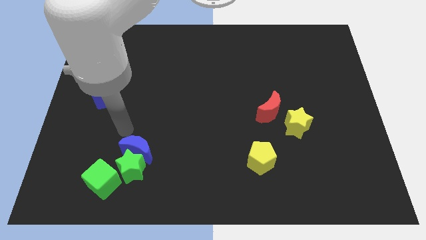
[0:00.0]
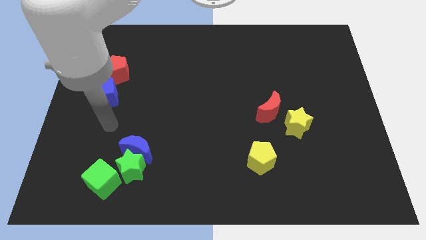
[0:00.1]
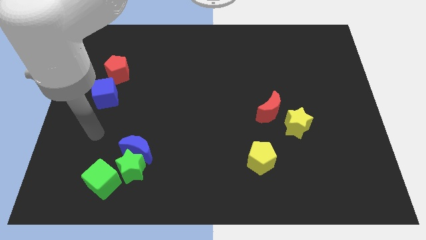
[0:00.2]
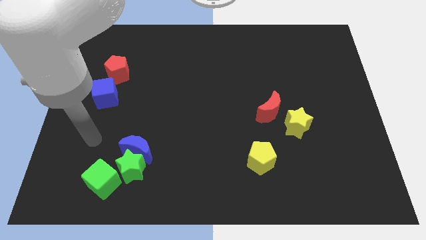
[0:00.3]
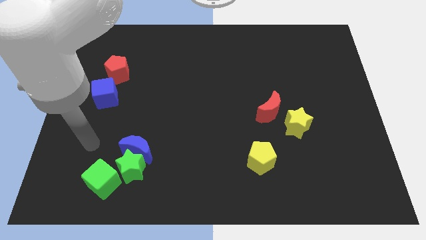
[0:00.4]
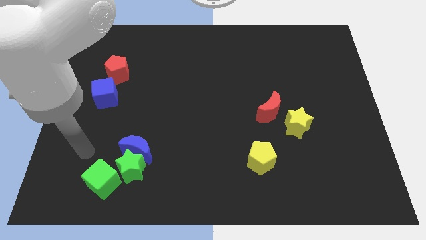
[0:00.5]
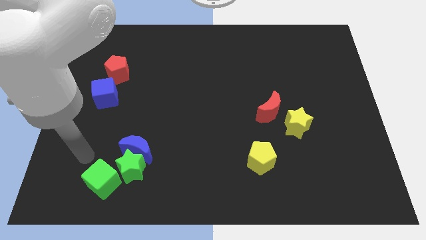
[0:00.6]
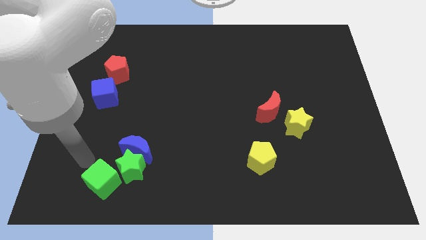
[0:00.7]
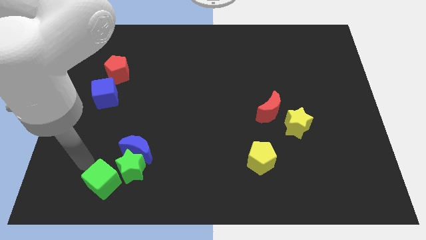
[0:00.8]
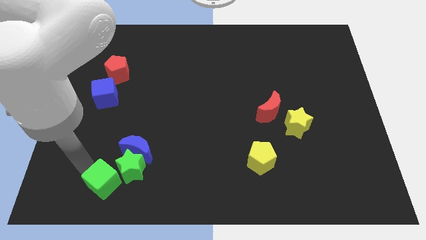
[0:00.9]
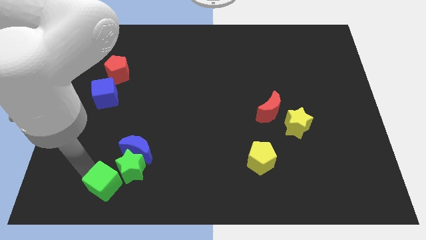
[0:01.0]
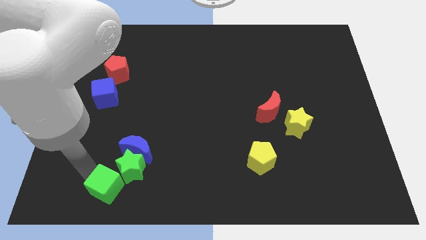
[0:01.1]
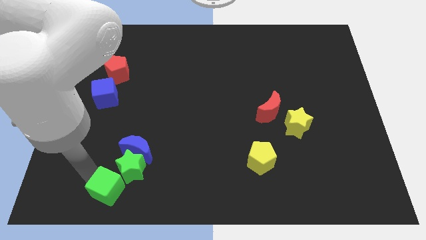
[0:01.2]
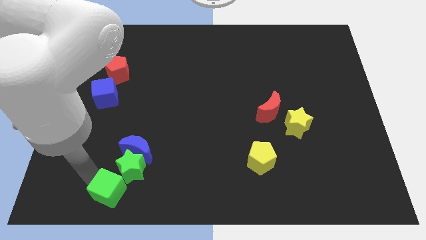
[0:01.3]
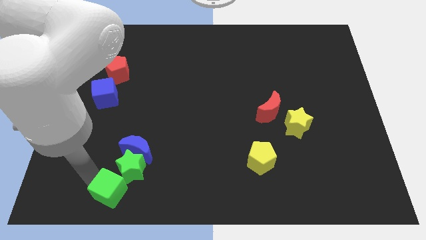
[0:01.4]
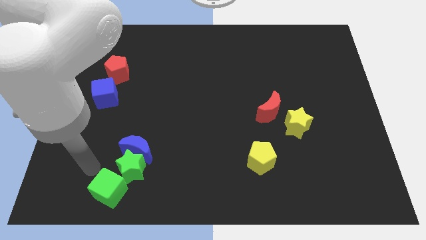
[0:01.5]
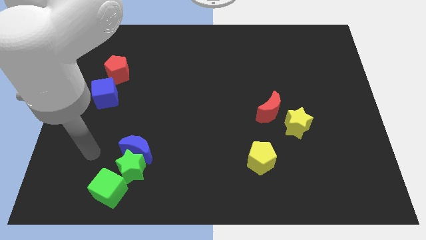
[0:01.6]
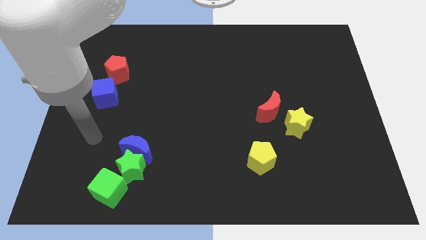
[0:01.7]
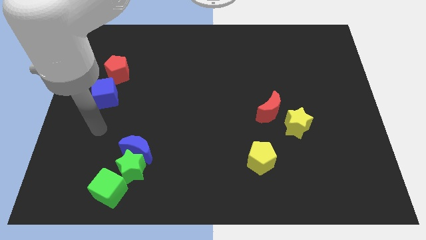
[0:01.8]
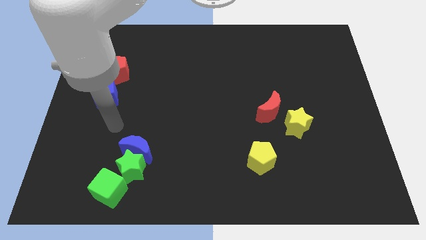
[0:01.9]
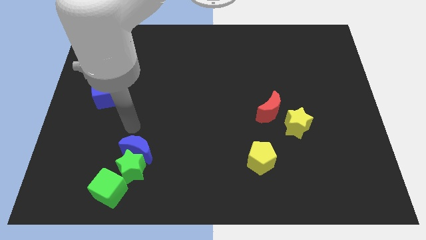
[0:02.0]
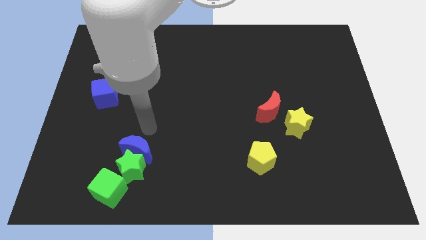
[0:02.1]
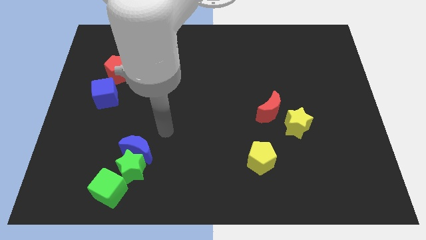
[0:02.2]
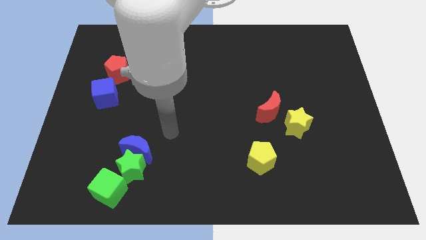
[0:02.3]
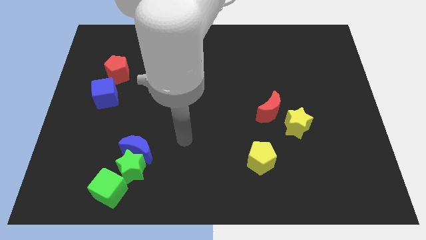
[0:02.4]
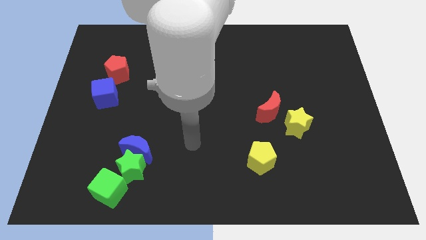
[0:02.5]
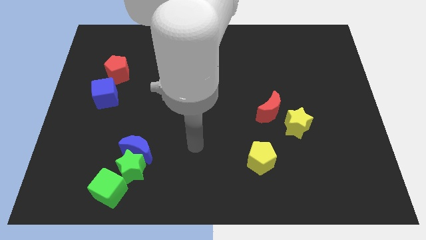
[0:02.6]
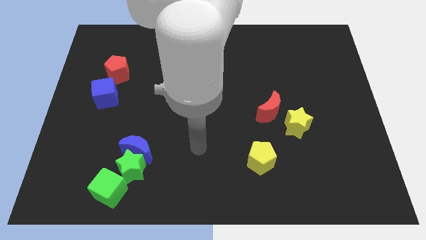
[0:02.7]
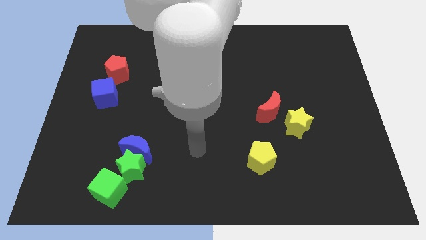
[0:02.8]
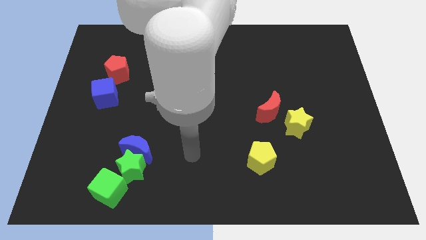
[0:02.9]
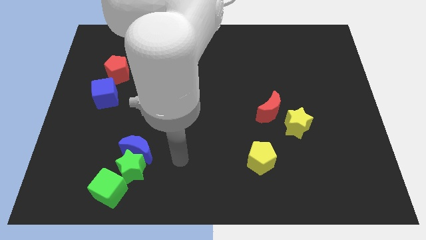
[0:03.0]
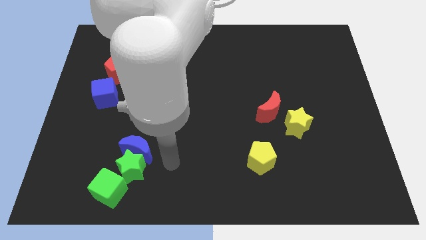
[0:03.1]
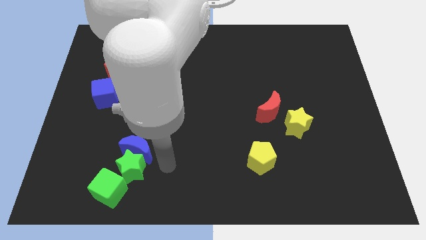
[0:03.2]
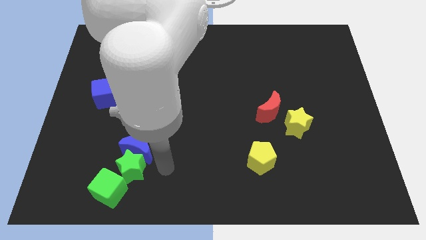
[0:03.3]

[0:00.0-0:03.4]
move the green cube to the bottom left side of the green star

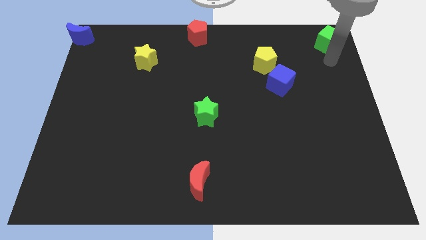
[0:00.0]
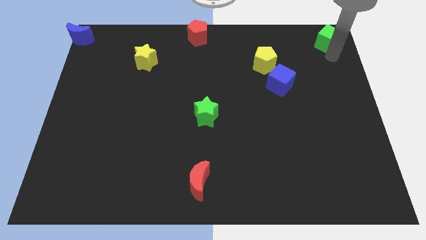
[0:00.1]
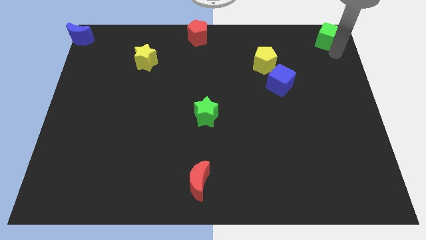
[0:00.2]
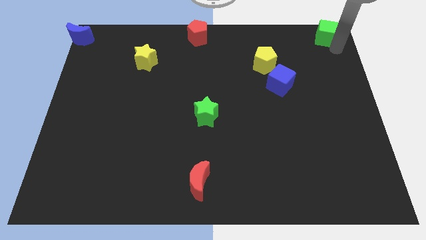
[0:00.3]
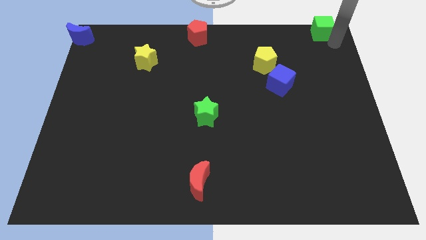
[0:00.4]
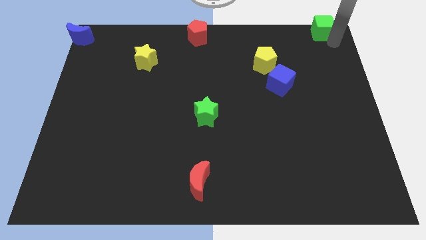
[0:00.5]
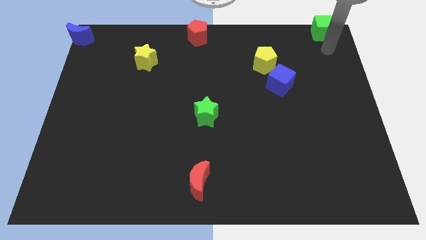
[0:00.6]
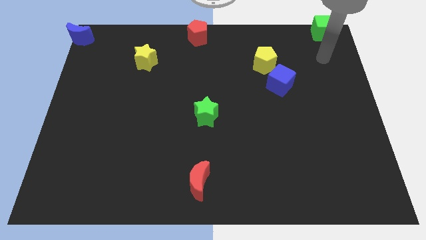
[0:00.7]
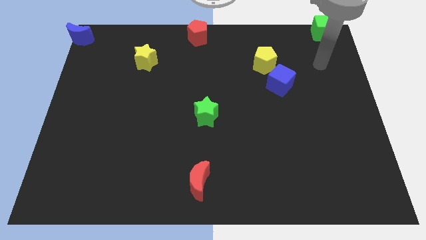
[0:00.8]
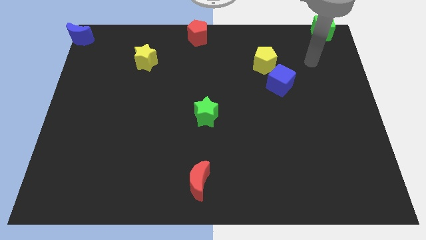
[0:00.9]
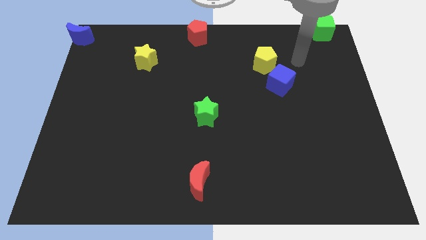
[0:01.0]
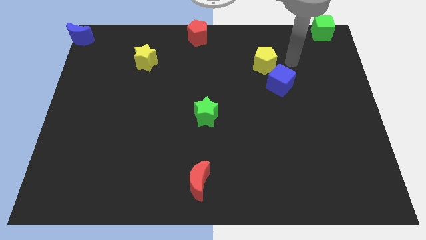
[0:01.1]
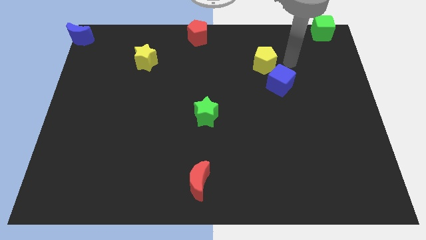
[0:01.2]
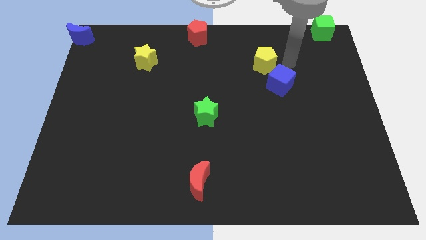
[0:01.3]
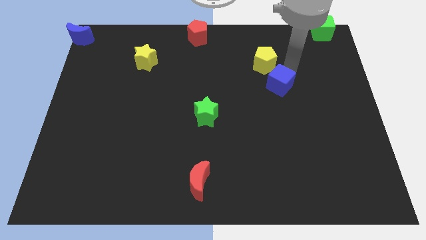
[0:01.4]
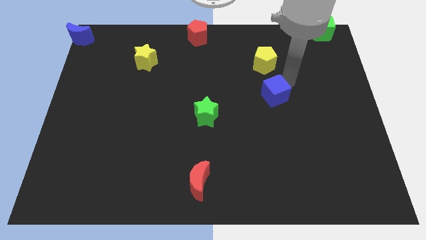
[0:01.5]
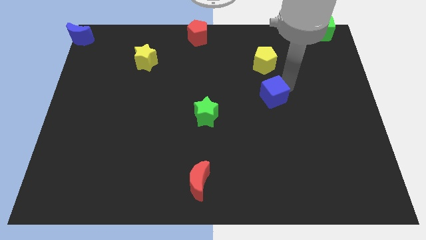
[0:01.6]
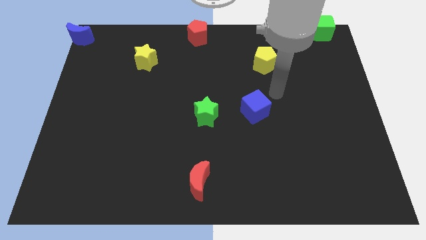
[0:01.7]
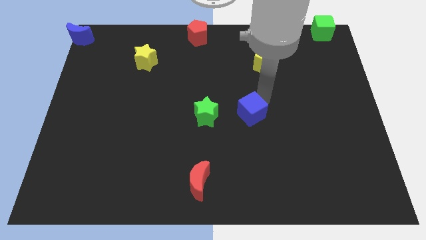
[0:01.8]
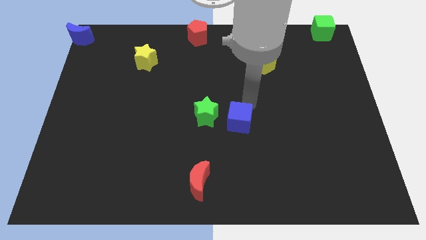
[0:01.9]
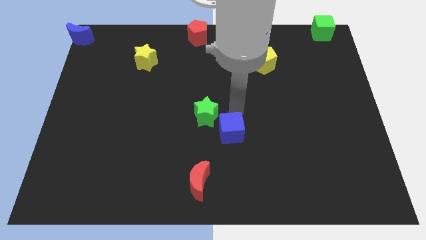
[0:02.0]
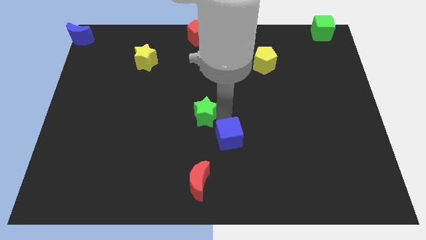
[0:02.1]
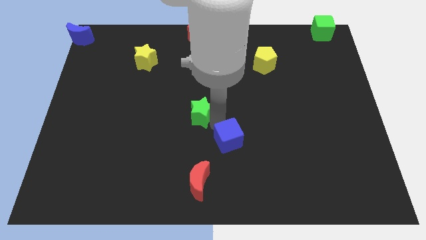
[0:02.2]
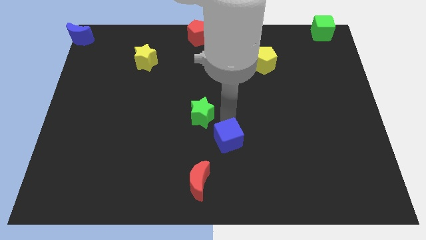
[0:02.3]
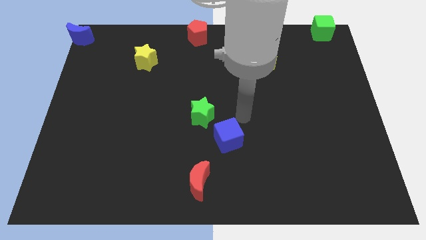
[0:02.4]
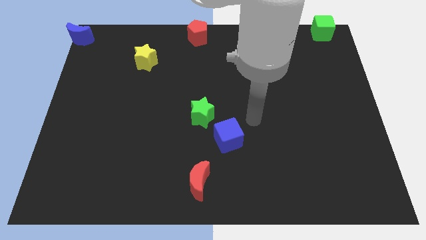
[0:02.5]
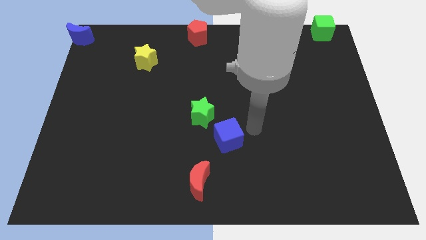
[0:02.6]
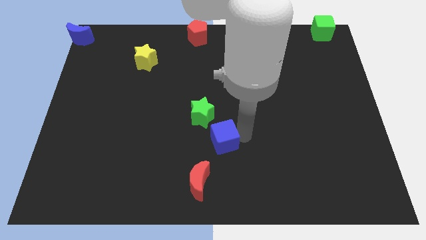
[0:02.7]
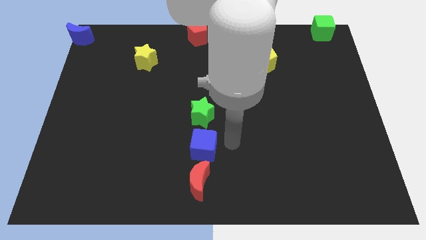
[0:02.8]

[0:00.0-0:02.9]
place the blue cube to the bottom side of the green star

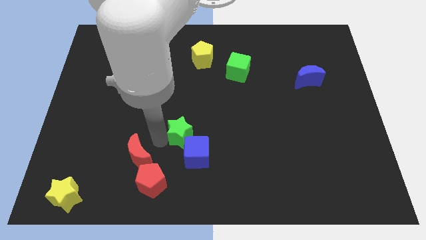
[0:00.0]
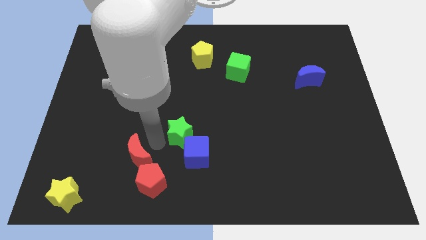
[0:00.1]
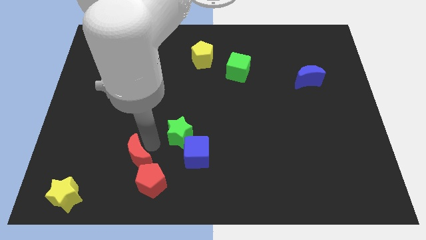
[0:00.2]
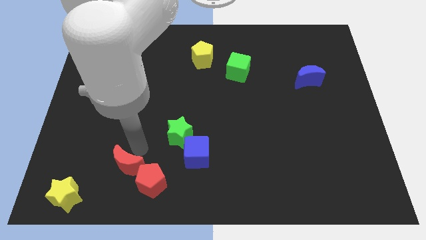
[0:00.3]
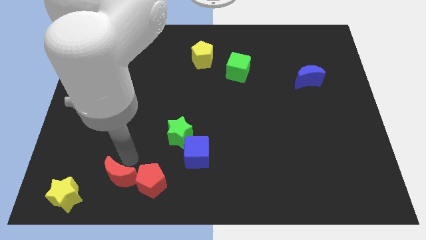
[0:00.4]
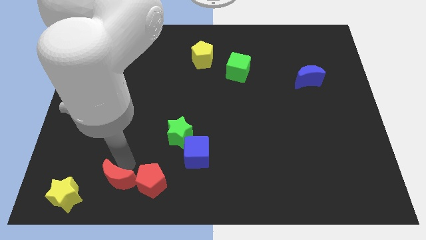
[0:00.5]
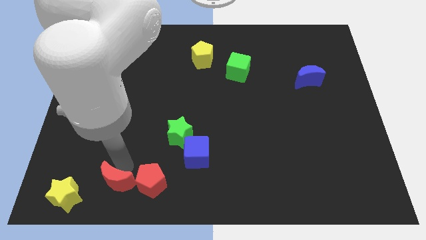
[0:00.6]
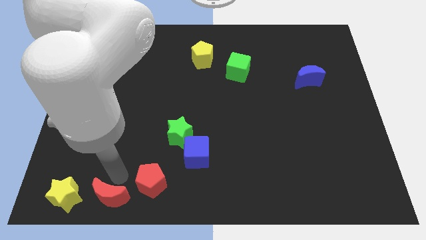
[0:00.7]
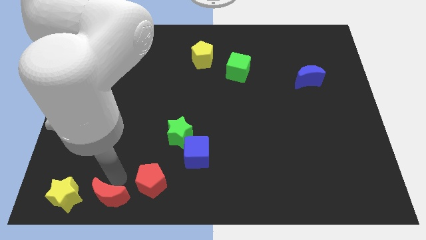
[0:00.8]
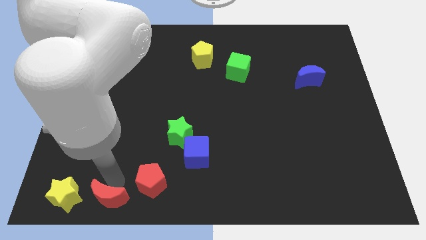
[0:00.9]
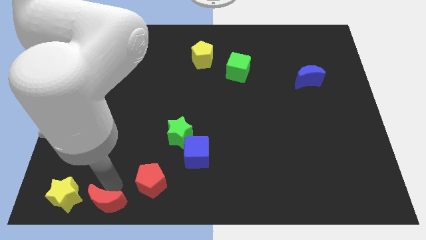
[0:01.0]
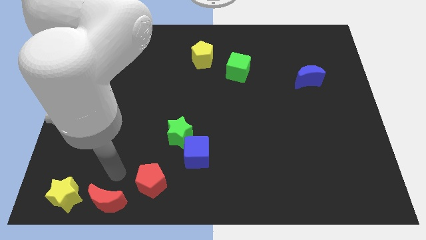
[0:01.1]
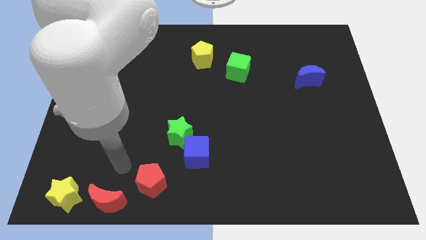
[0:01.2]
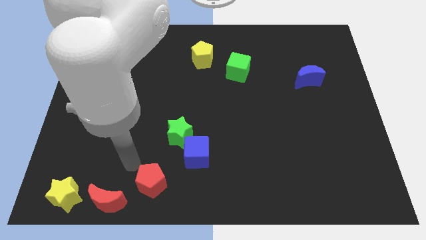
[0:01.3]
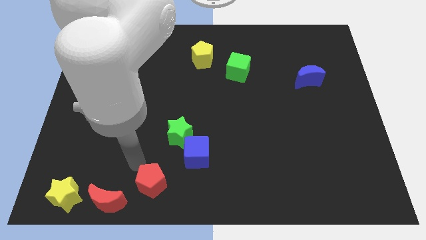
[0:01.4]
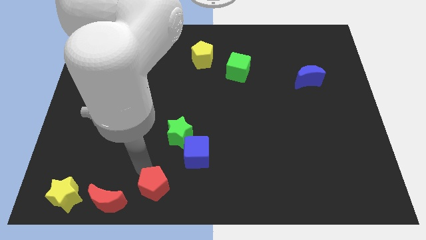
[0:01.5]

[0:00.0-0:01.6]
place the re moon to the right of the yellow star

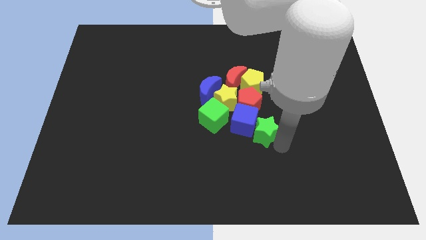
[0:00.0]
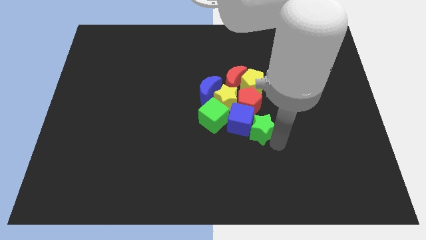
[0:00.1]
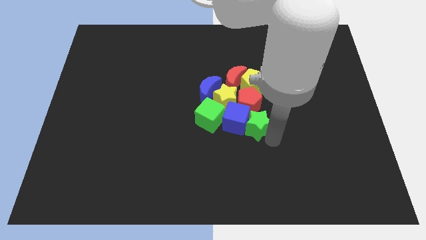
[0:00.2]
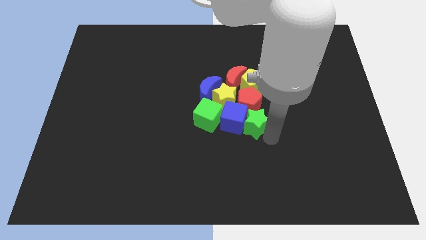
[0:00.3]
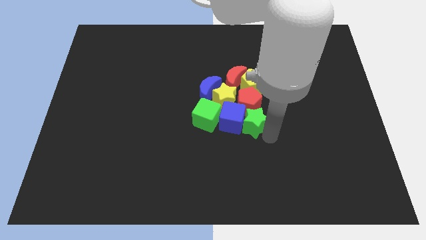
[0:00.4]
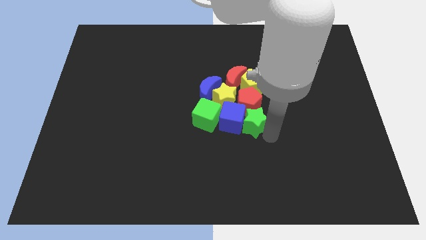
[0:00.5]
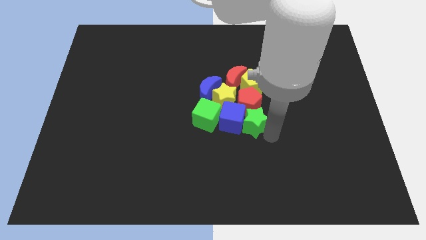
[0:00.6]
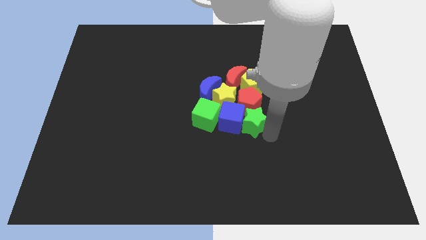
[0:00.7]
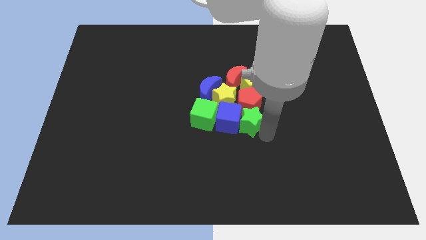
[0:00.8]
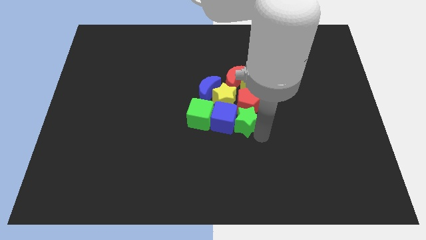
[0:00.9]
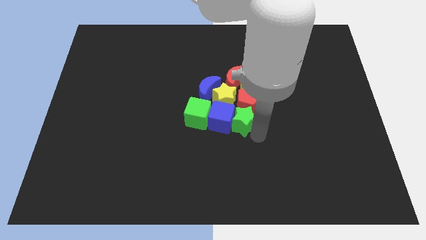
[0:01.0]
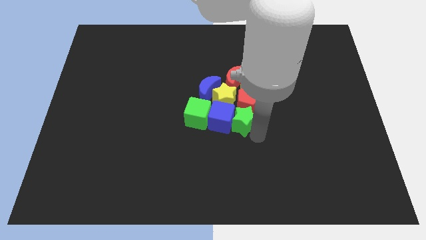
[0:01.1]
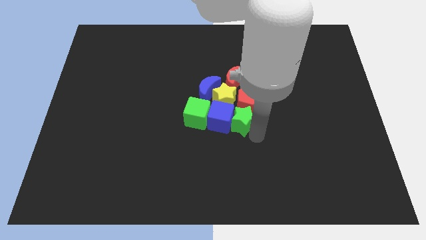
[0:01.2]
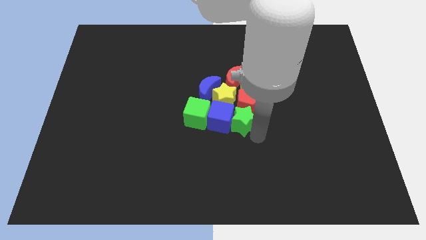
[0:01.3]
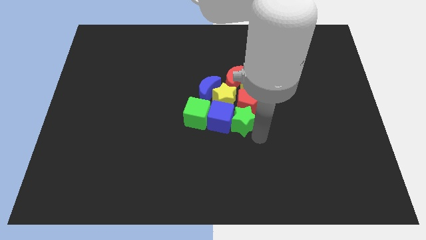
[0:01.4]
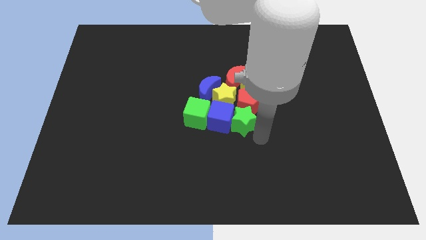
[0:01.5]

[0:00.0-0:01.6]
move the green star to the group of blocks
